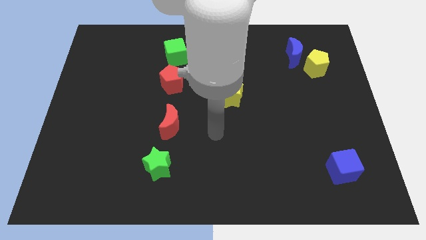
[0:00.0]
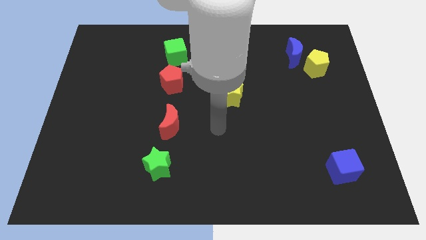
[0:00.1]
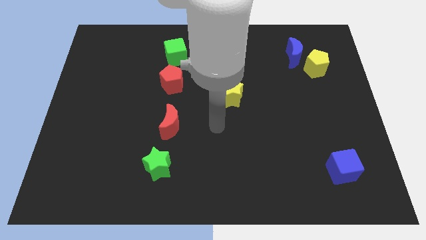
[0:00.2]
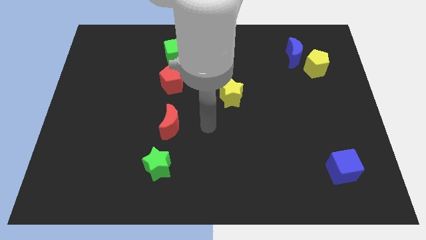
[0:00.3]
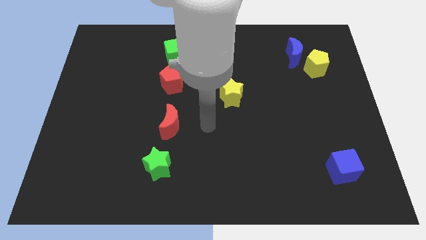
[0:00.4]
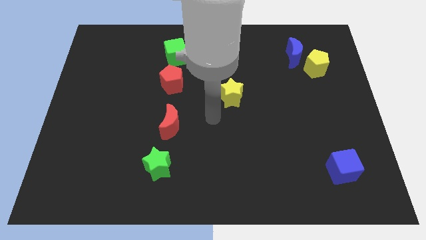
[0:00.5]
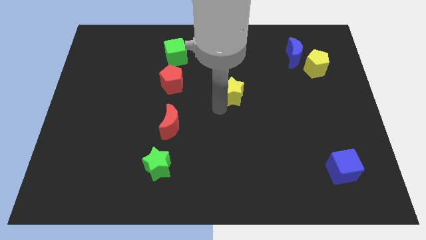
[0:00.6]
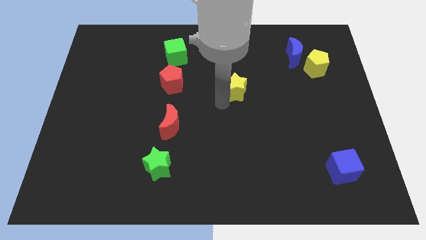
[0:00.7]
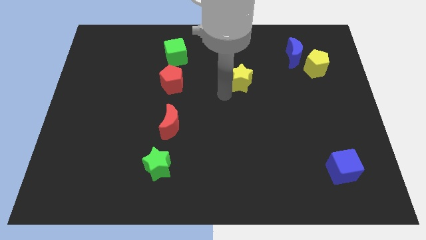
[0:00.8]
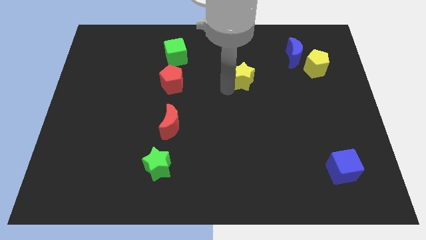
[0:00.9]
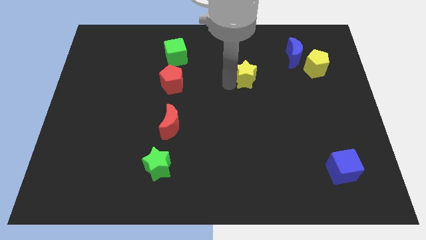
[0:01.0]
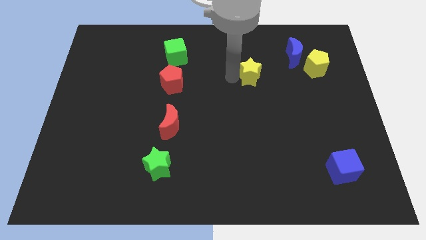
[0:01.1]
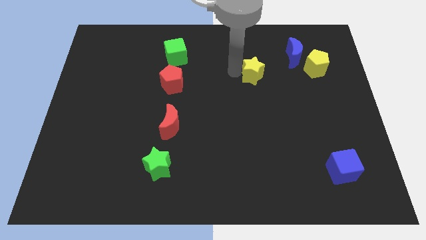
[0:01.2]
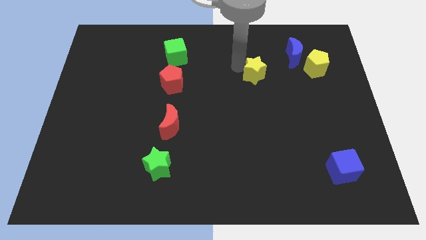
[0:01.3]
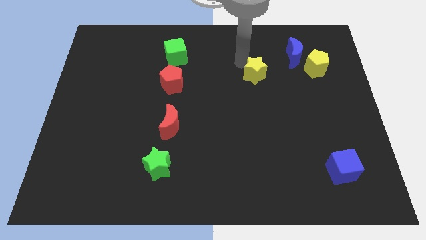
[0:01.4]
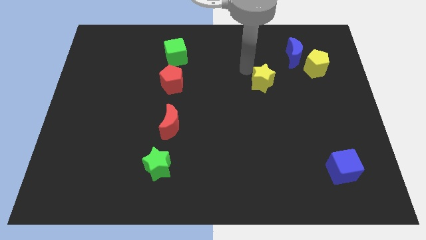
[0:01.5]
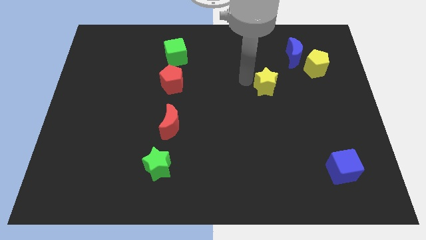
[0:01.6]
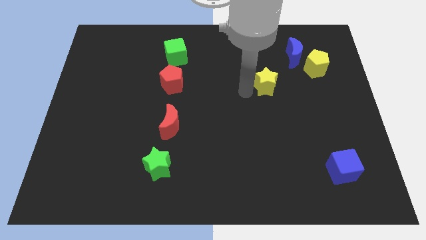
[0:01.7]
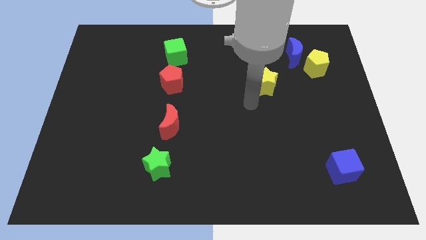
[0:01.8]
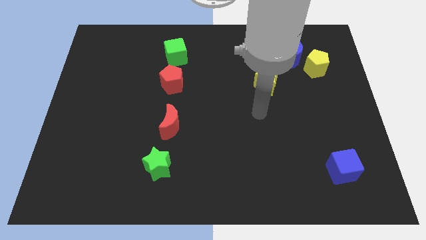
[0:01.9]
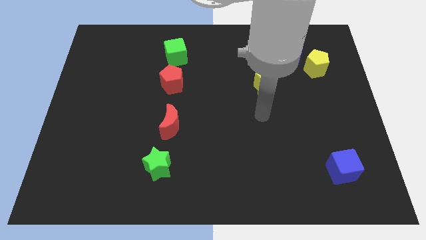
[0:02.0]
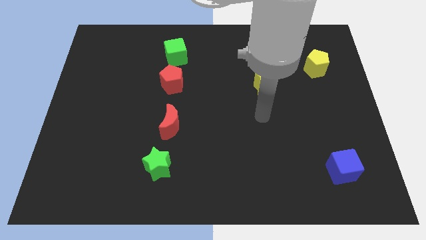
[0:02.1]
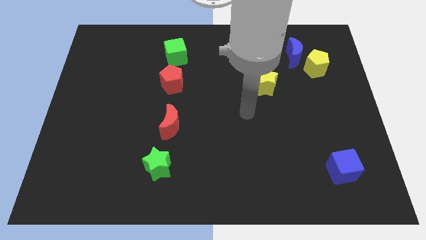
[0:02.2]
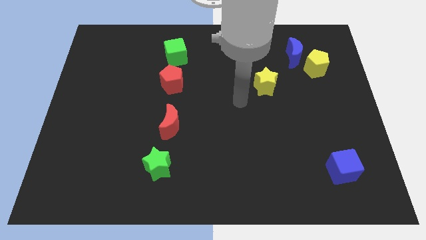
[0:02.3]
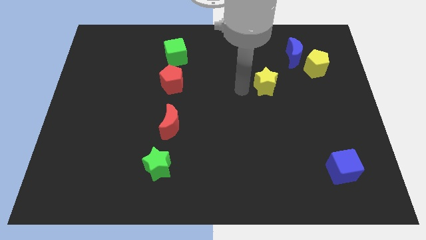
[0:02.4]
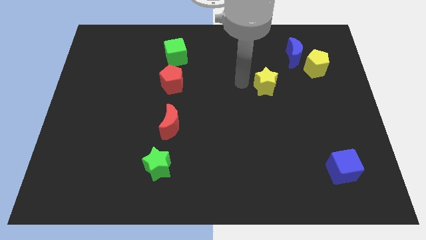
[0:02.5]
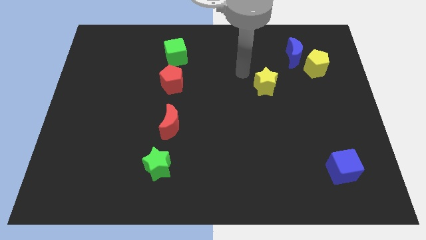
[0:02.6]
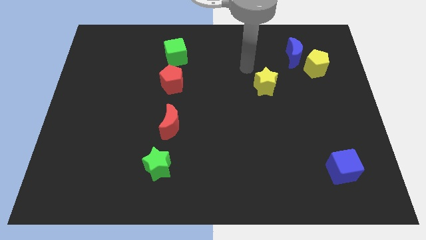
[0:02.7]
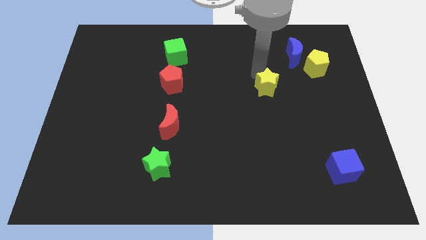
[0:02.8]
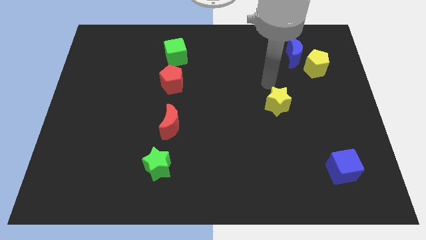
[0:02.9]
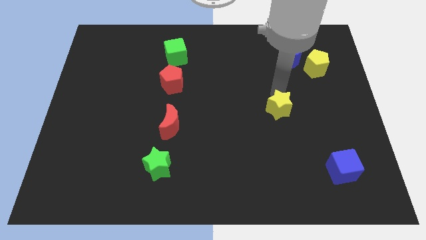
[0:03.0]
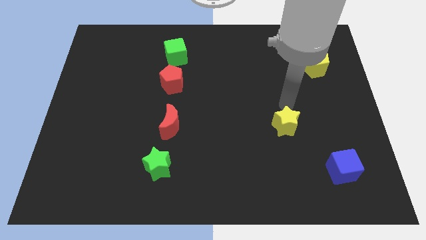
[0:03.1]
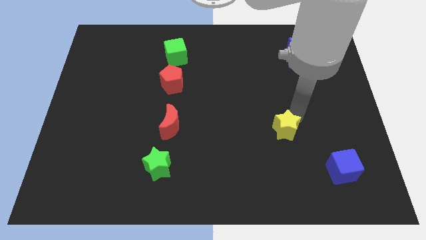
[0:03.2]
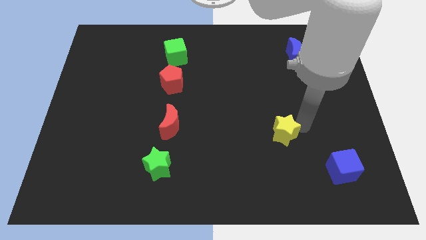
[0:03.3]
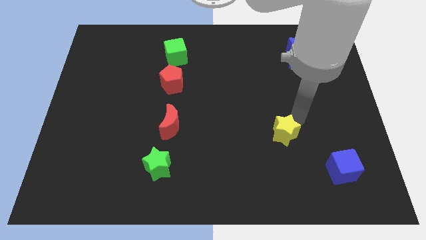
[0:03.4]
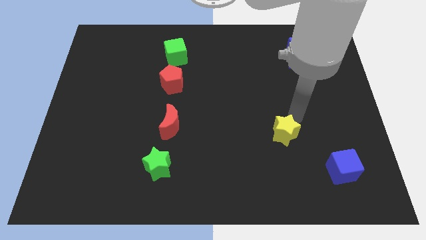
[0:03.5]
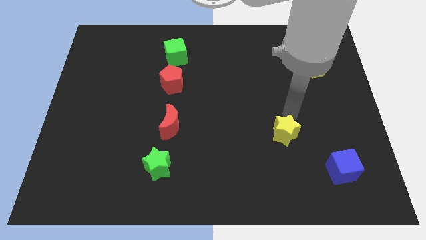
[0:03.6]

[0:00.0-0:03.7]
put the red moon and the yellow star in a line horizontally

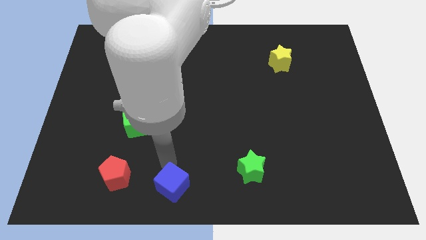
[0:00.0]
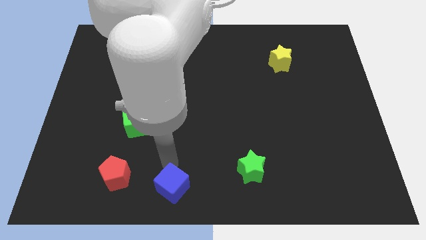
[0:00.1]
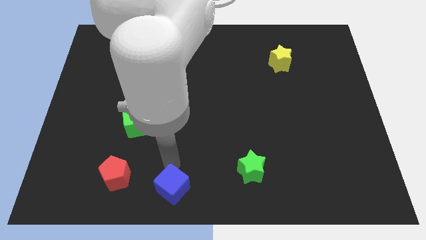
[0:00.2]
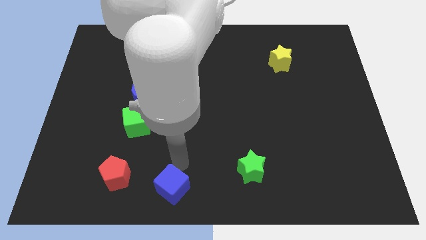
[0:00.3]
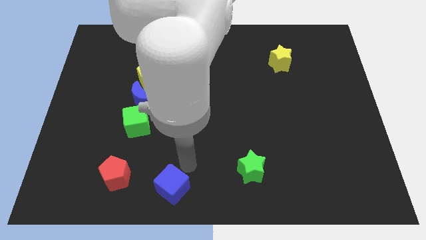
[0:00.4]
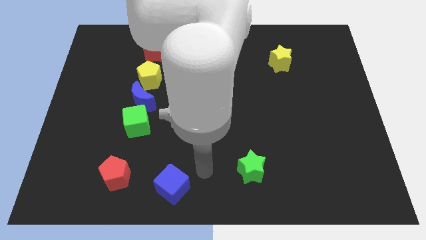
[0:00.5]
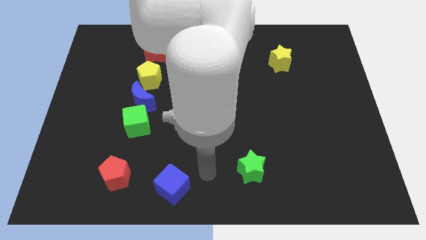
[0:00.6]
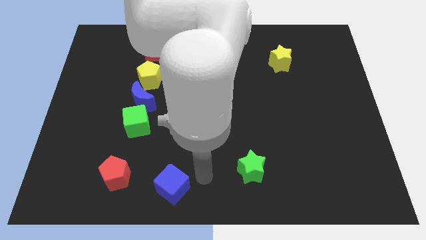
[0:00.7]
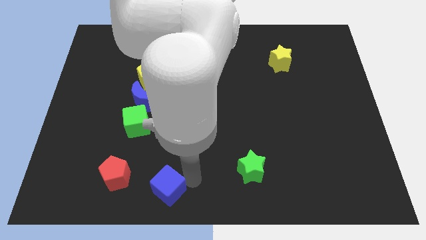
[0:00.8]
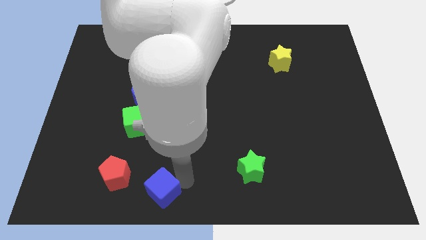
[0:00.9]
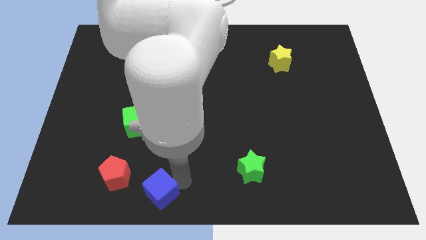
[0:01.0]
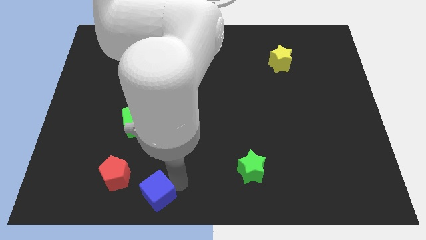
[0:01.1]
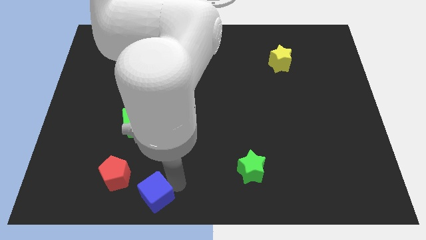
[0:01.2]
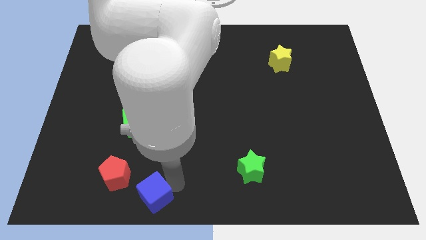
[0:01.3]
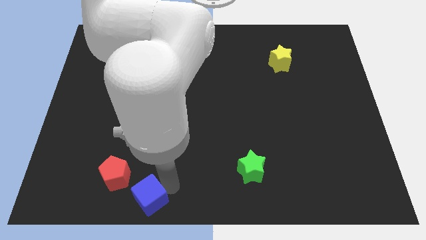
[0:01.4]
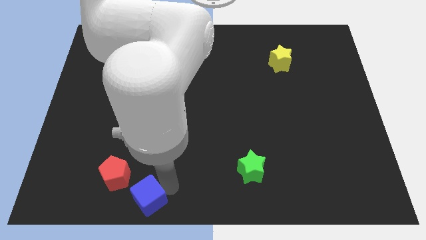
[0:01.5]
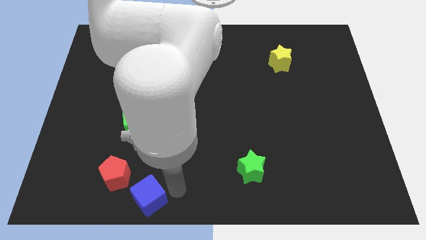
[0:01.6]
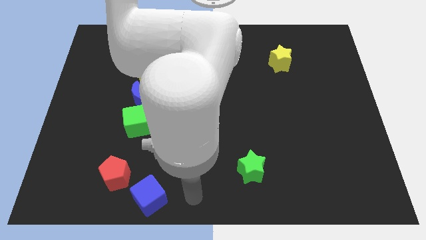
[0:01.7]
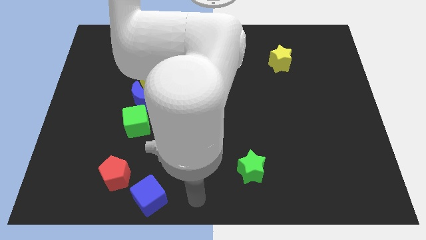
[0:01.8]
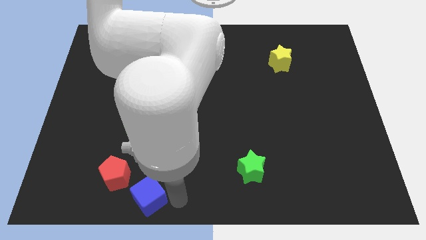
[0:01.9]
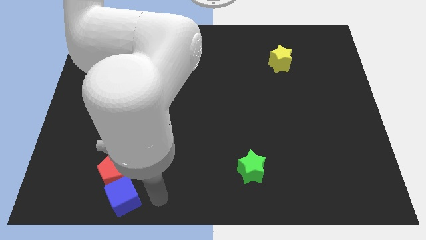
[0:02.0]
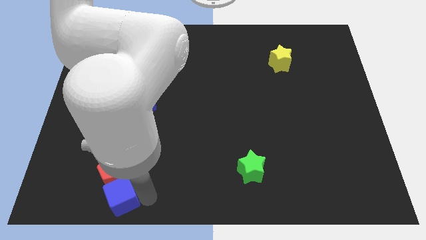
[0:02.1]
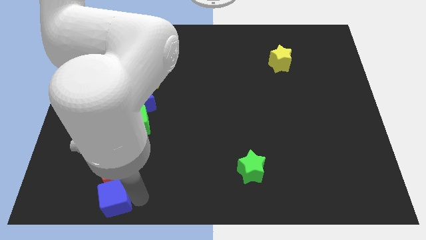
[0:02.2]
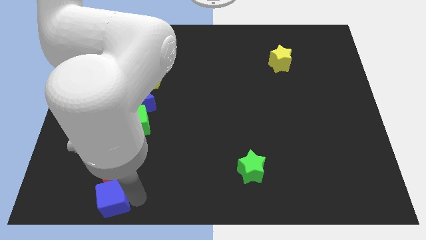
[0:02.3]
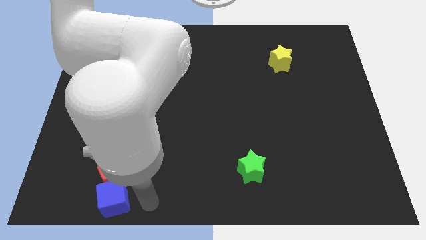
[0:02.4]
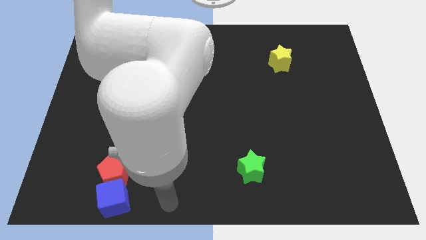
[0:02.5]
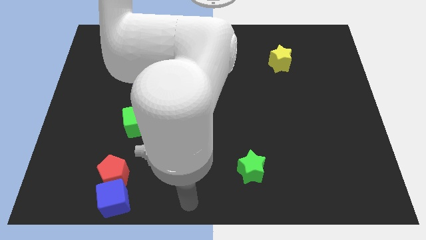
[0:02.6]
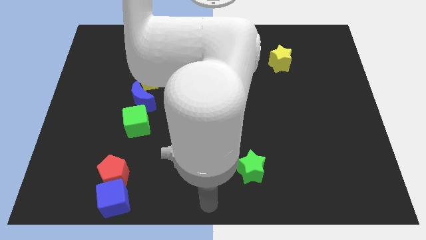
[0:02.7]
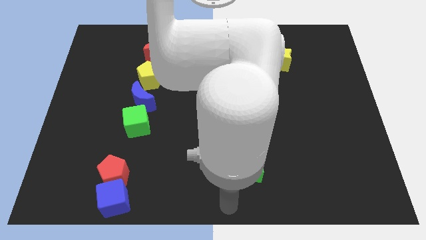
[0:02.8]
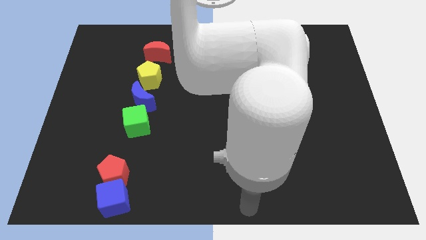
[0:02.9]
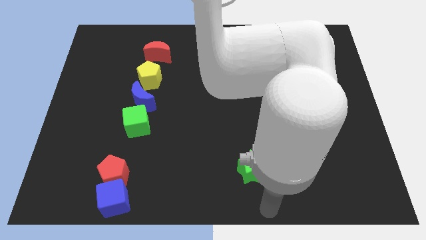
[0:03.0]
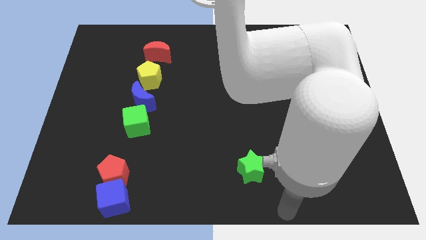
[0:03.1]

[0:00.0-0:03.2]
push blue cube below red pentagon

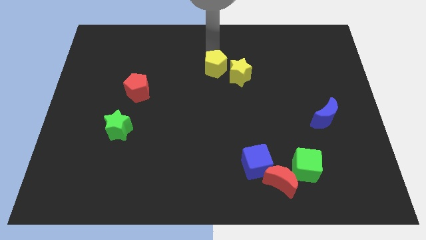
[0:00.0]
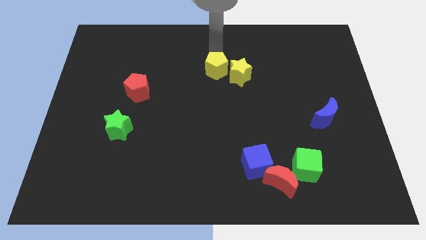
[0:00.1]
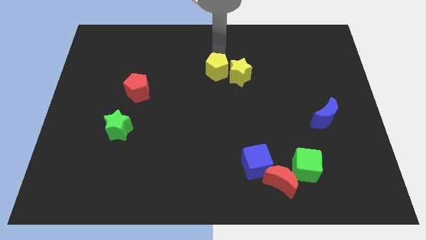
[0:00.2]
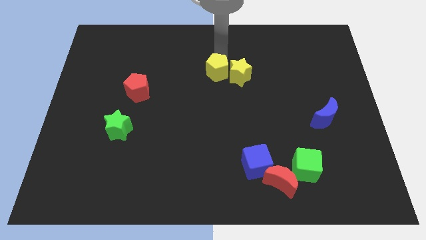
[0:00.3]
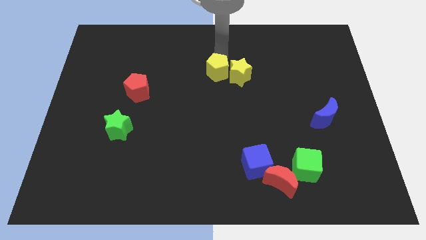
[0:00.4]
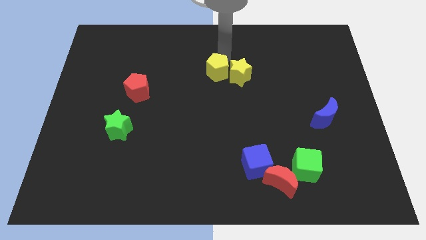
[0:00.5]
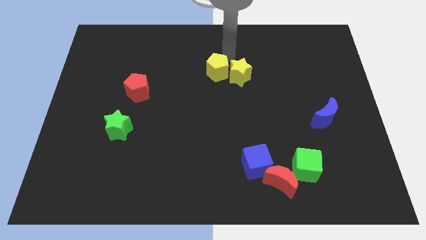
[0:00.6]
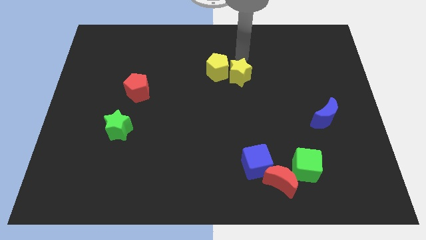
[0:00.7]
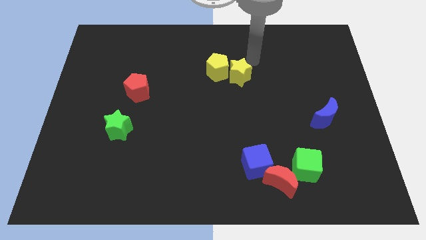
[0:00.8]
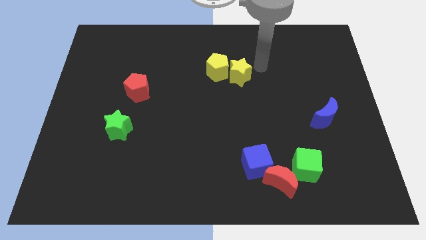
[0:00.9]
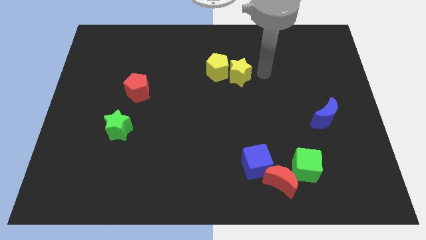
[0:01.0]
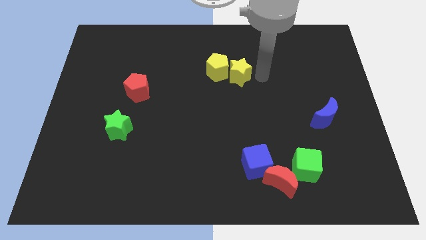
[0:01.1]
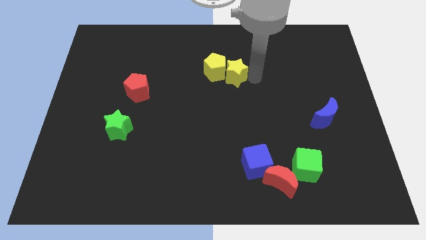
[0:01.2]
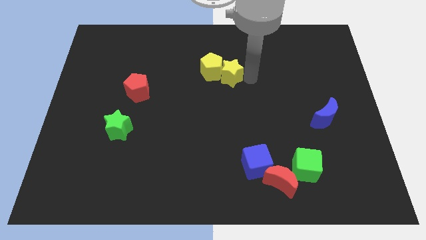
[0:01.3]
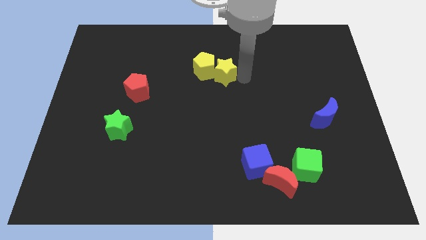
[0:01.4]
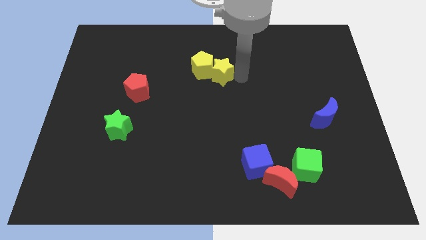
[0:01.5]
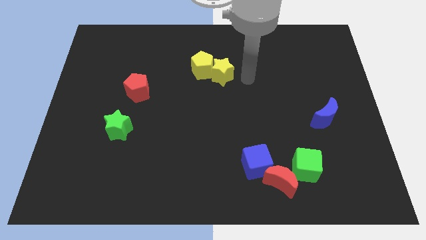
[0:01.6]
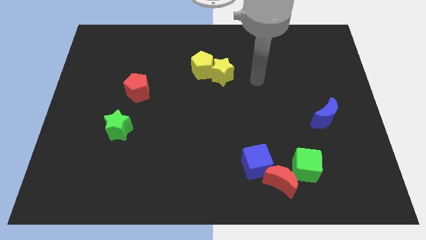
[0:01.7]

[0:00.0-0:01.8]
push the yellow star into the yellow pentagon

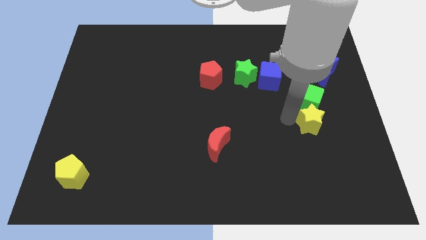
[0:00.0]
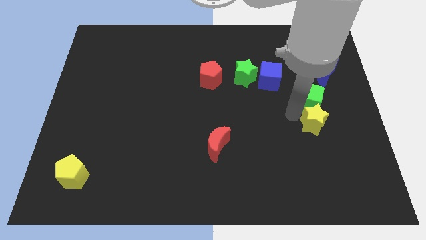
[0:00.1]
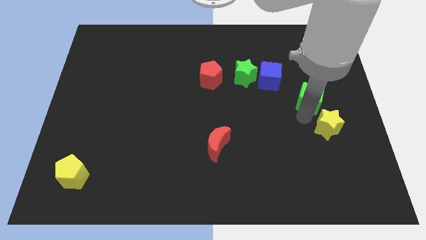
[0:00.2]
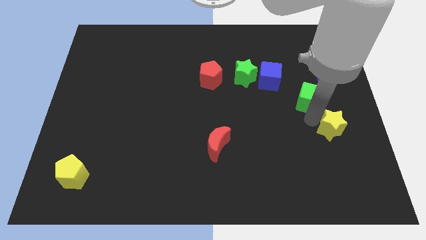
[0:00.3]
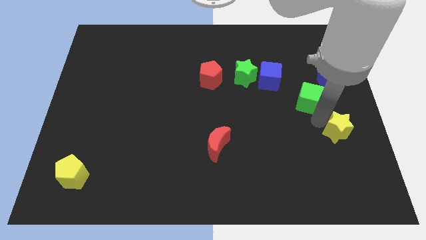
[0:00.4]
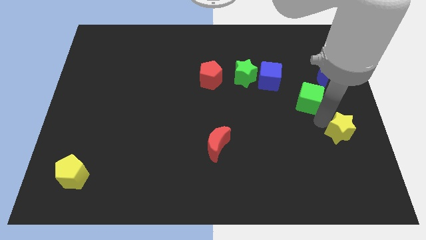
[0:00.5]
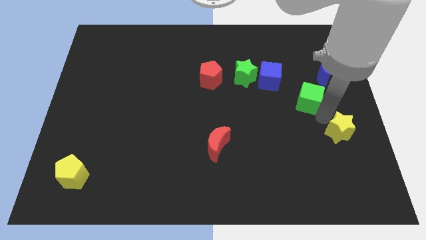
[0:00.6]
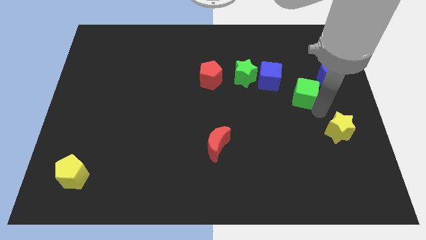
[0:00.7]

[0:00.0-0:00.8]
separate the yellow star from the green cube
